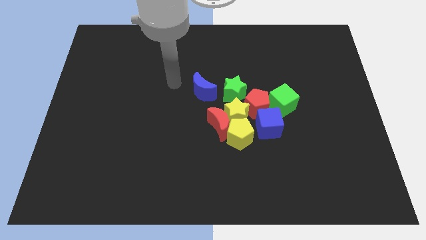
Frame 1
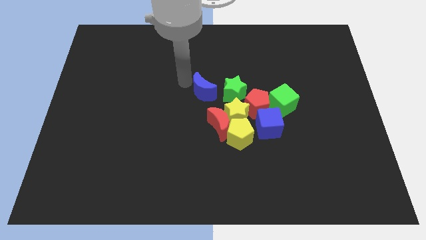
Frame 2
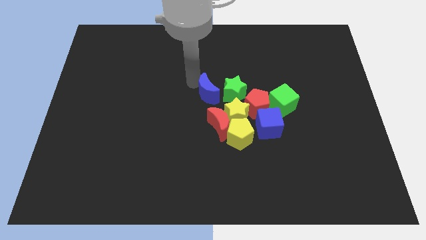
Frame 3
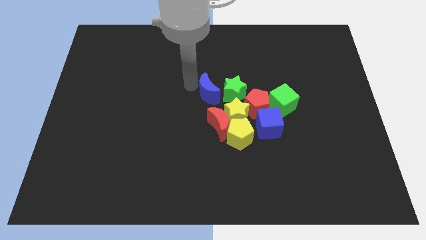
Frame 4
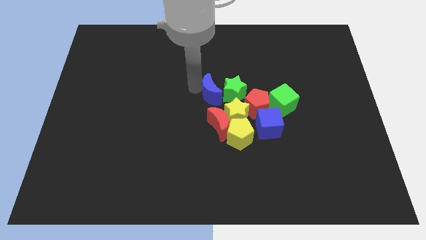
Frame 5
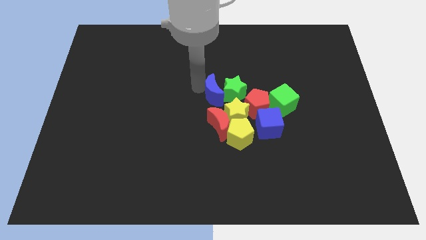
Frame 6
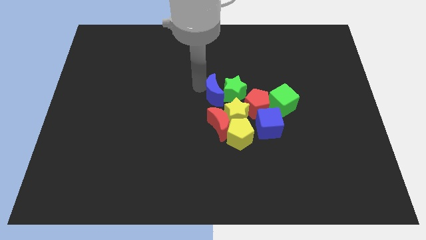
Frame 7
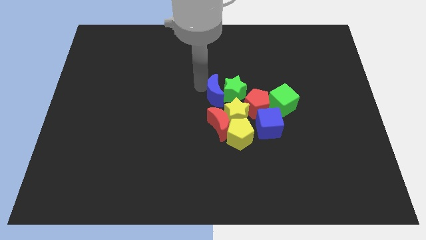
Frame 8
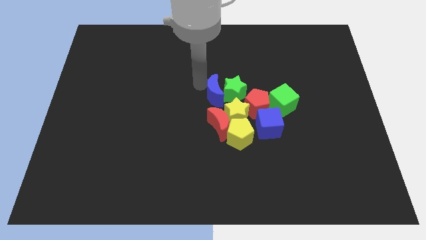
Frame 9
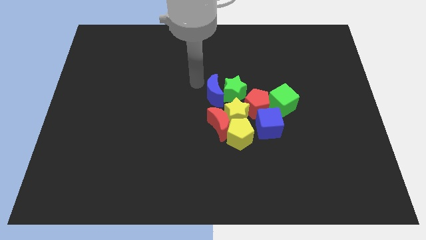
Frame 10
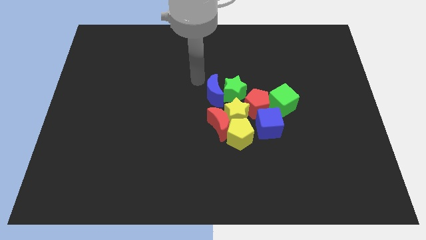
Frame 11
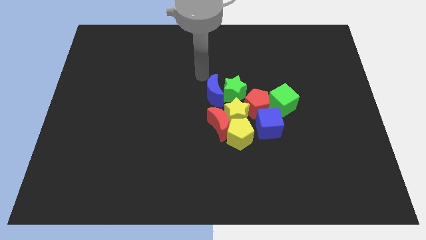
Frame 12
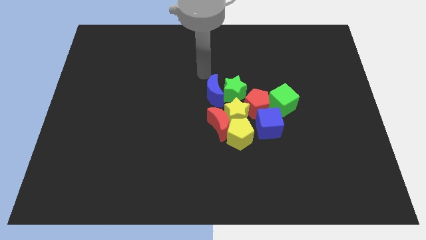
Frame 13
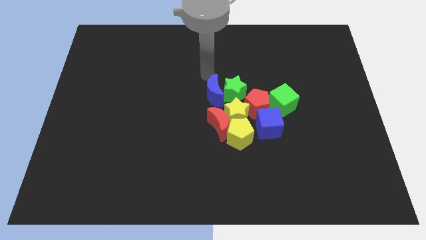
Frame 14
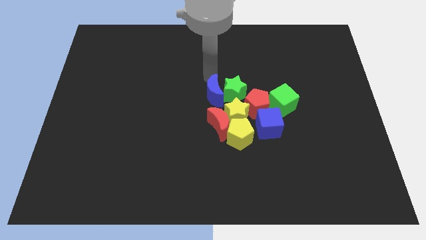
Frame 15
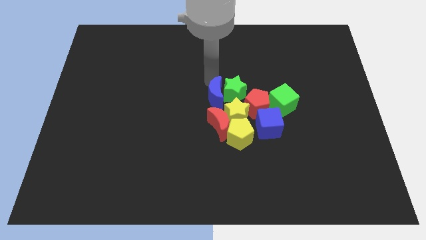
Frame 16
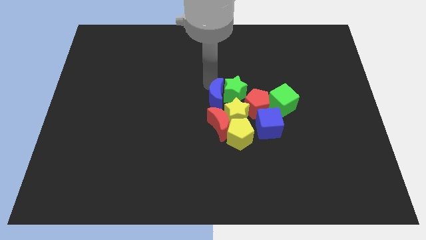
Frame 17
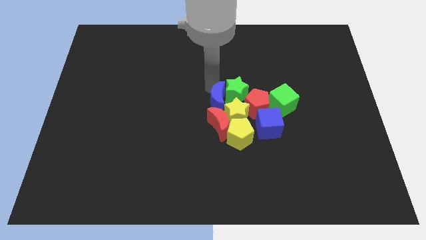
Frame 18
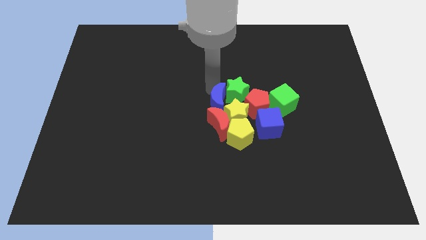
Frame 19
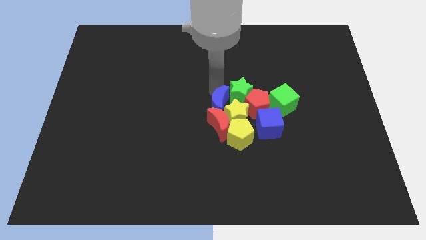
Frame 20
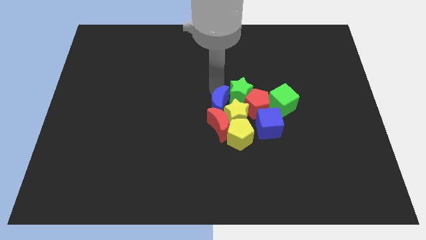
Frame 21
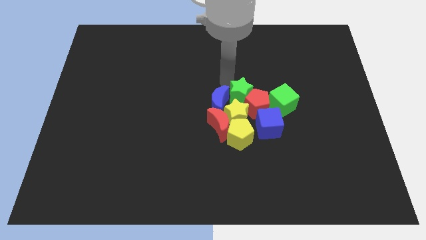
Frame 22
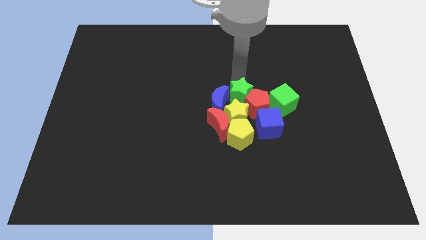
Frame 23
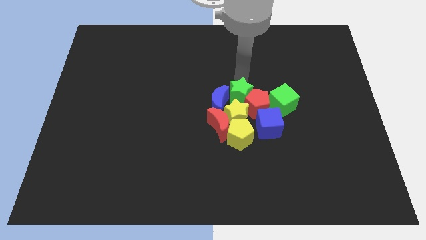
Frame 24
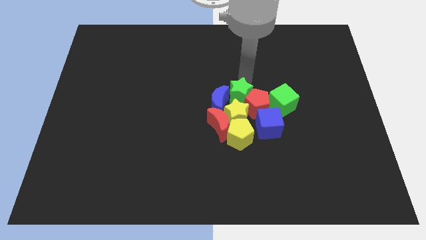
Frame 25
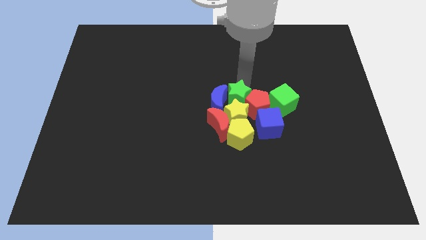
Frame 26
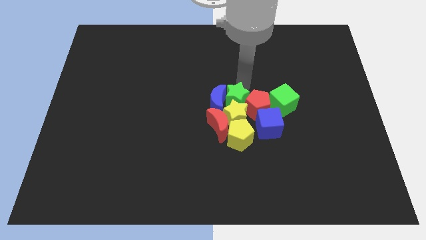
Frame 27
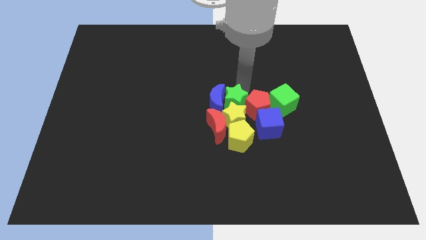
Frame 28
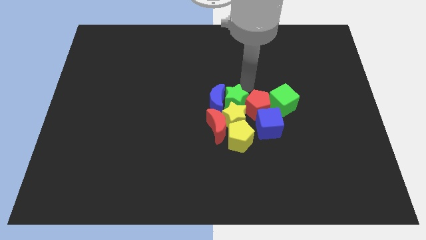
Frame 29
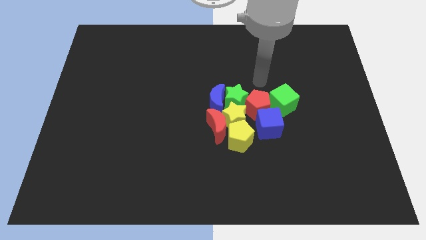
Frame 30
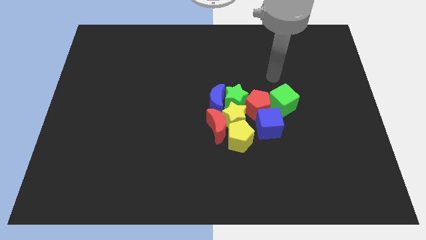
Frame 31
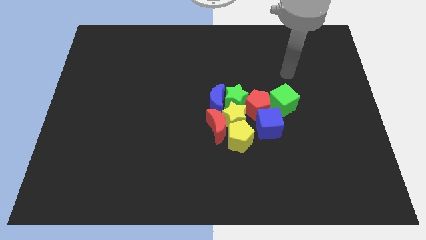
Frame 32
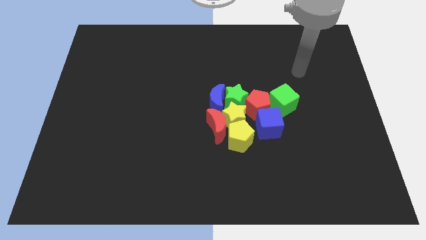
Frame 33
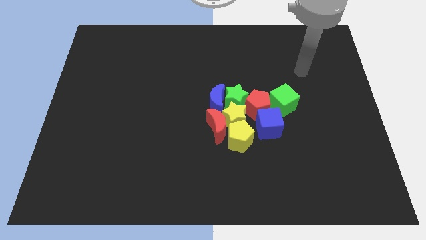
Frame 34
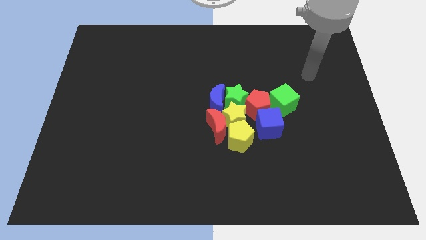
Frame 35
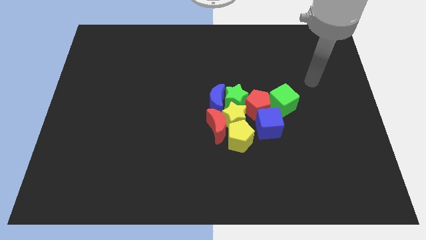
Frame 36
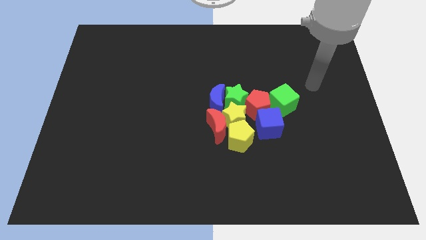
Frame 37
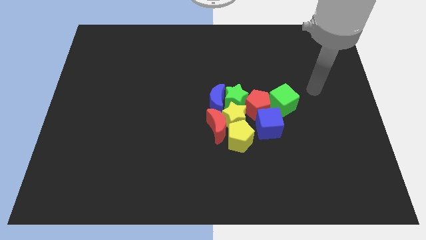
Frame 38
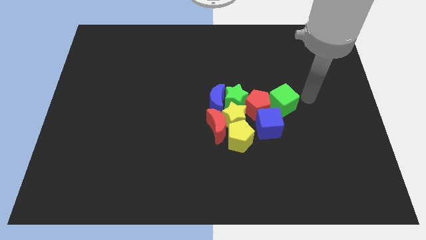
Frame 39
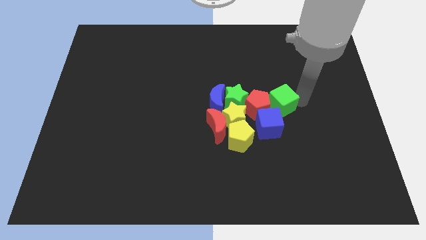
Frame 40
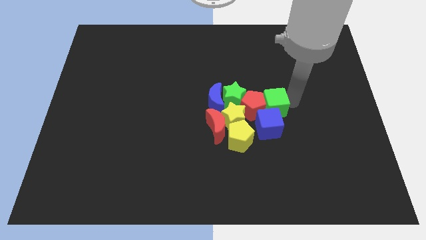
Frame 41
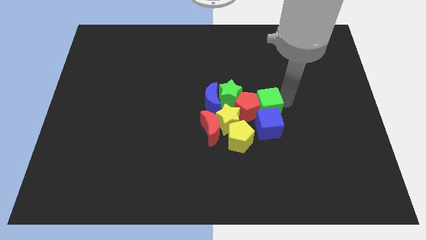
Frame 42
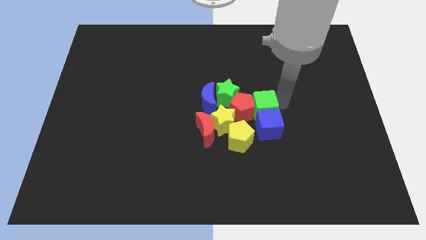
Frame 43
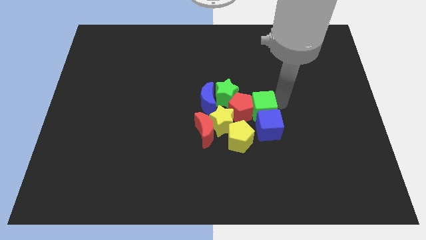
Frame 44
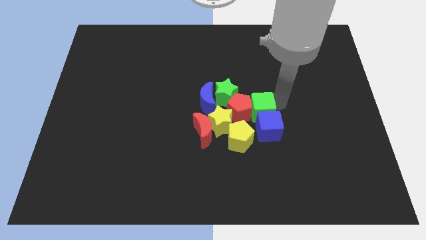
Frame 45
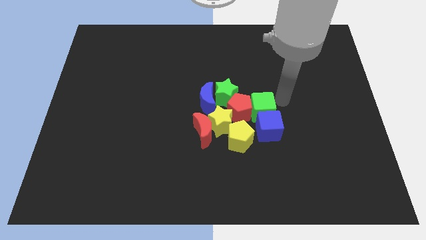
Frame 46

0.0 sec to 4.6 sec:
adjust the green star slightly

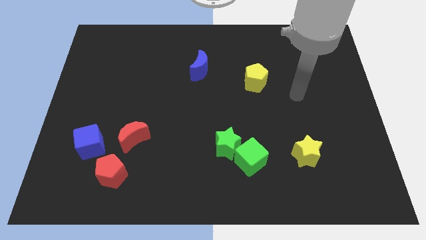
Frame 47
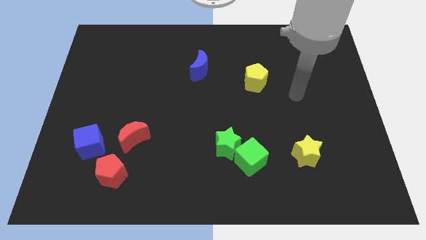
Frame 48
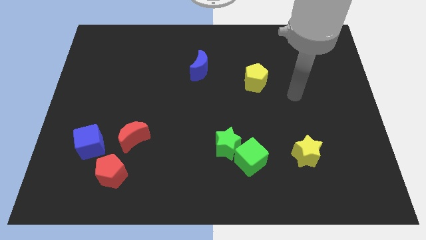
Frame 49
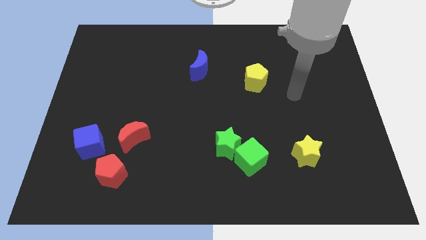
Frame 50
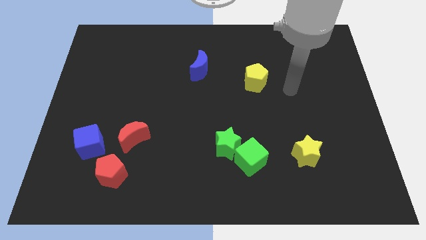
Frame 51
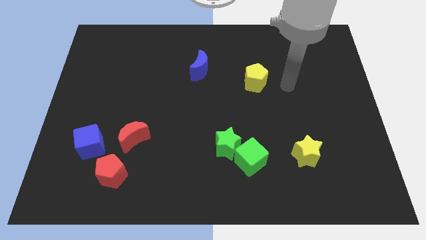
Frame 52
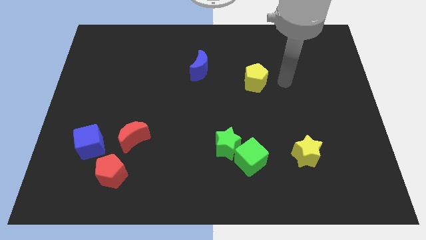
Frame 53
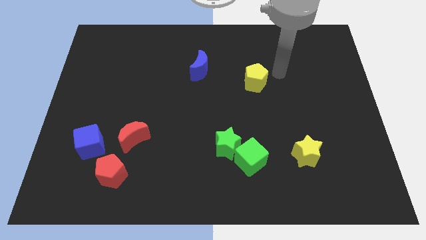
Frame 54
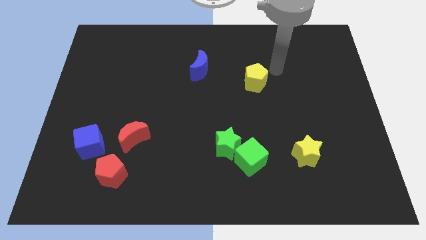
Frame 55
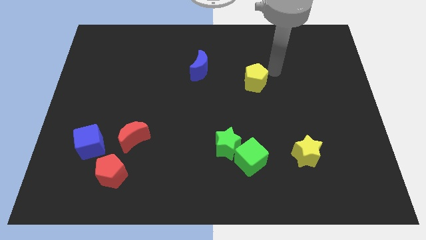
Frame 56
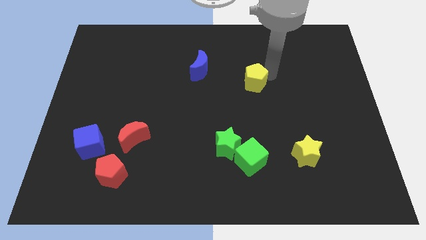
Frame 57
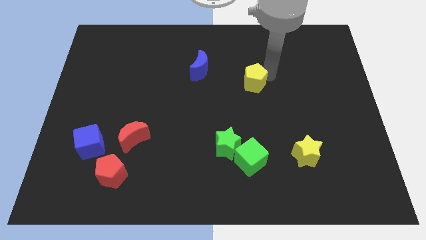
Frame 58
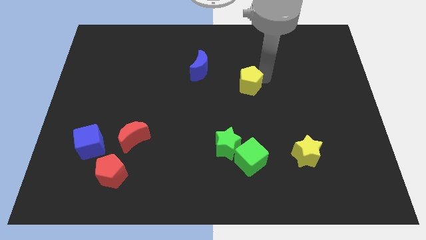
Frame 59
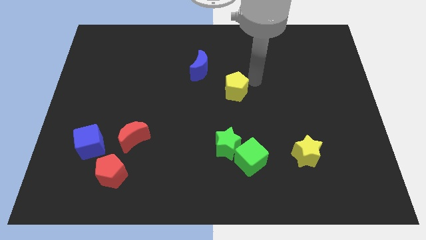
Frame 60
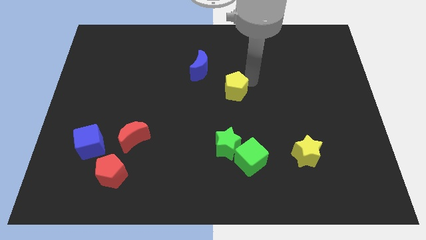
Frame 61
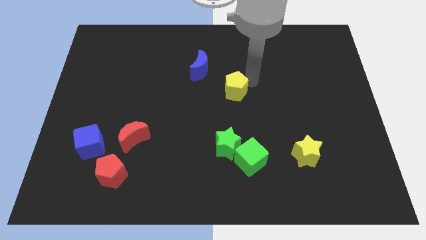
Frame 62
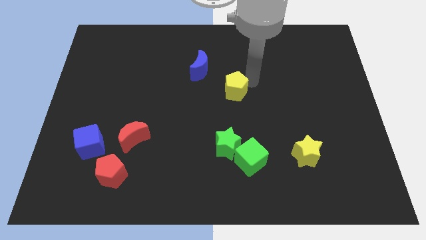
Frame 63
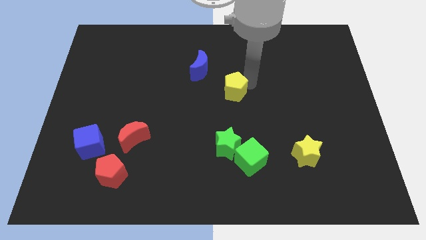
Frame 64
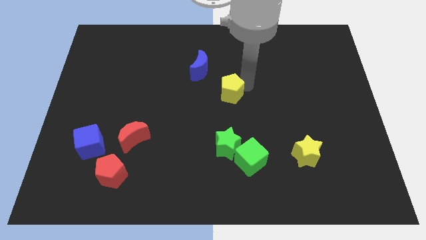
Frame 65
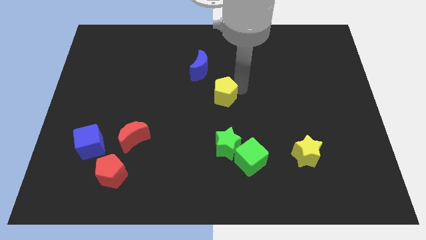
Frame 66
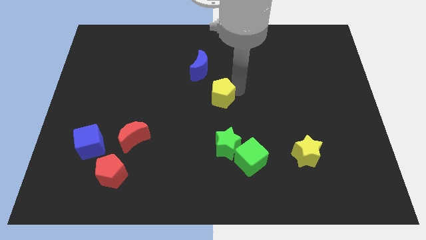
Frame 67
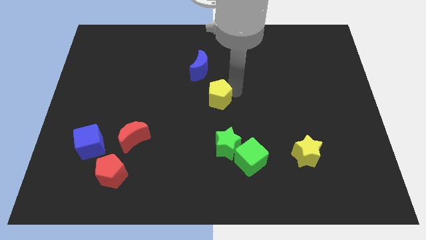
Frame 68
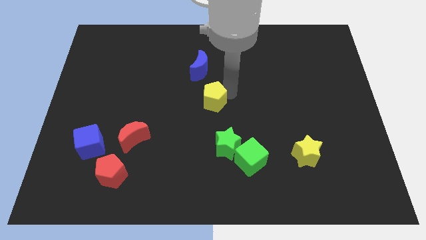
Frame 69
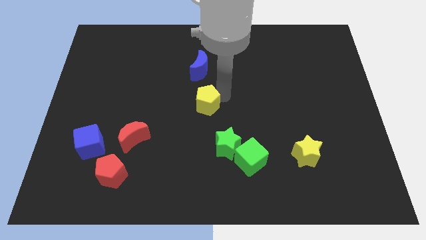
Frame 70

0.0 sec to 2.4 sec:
place yellow pentagon to the center of the board

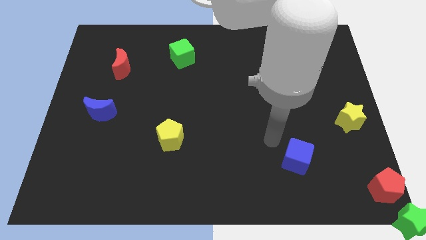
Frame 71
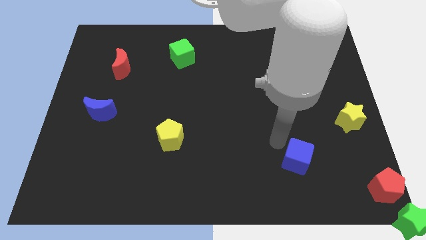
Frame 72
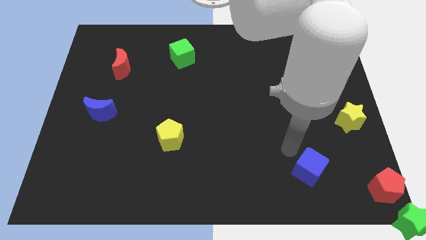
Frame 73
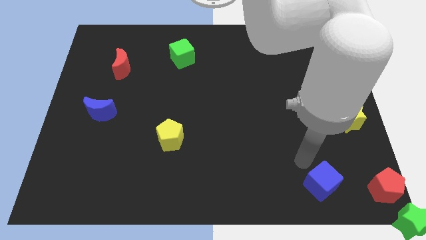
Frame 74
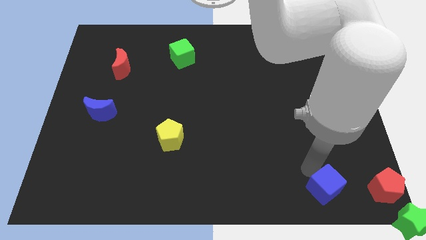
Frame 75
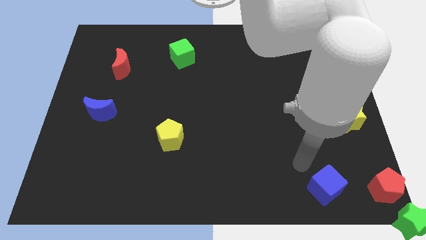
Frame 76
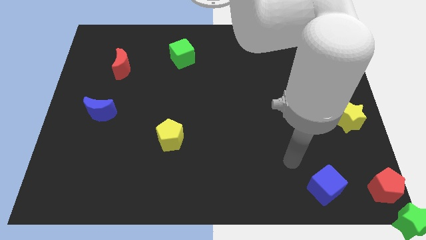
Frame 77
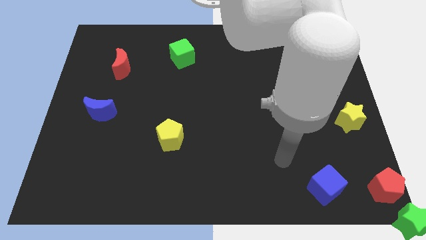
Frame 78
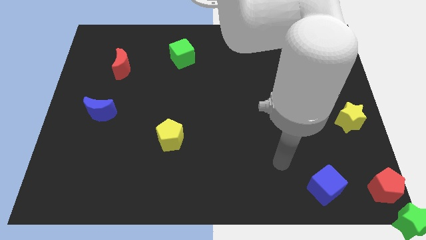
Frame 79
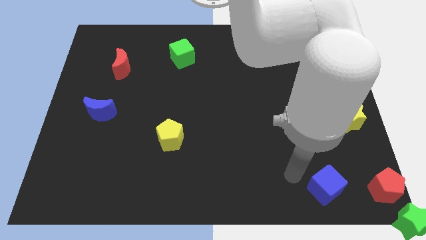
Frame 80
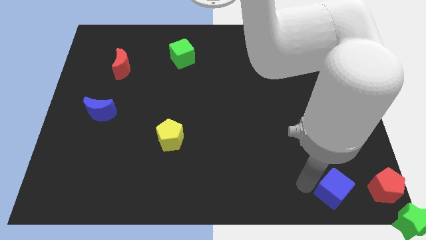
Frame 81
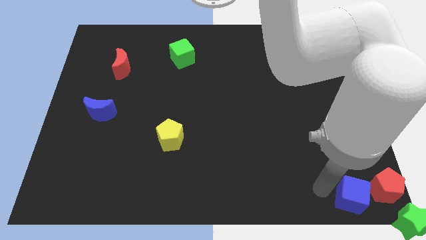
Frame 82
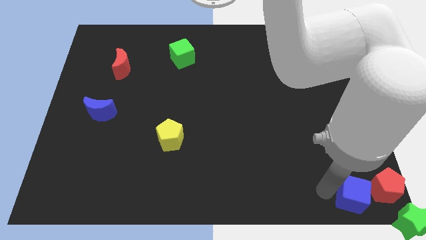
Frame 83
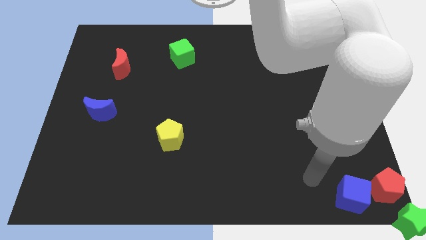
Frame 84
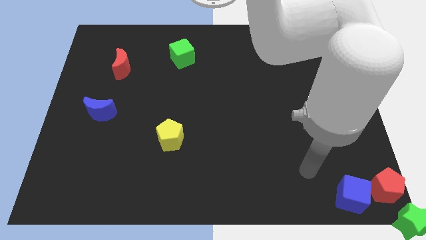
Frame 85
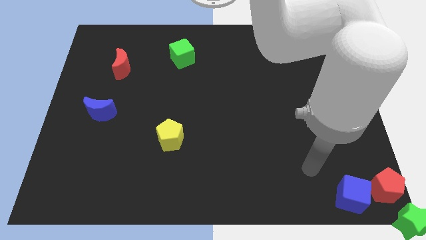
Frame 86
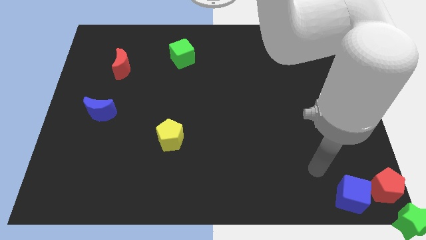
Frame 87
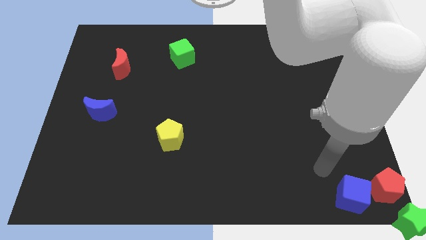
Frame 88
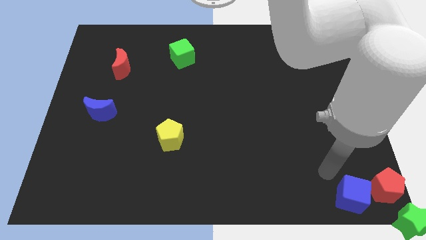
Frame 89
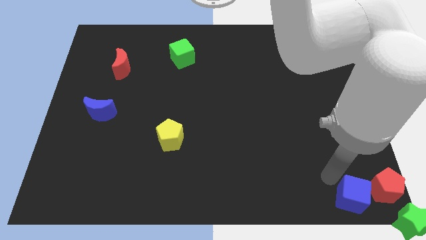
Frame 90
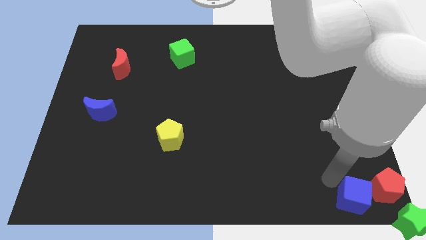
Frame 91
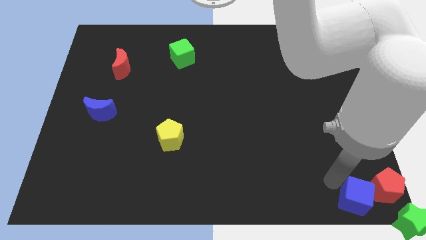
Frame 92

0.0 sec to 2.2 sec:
move the blue cube towards the bottom right
